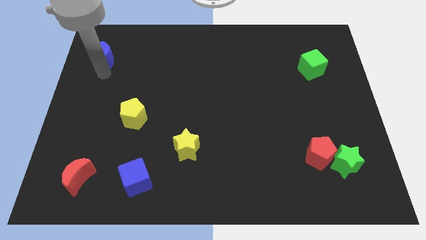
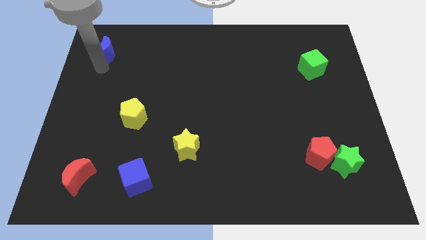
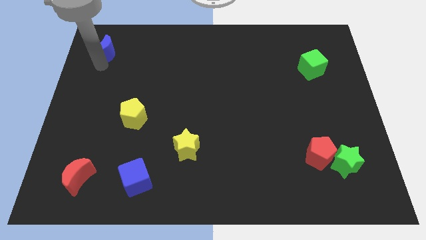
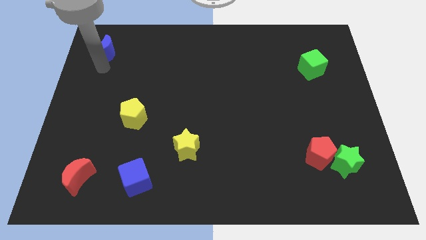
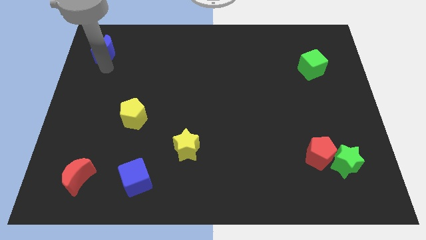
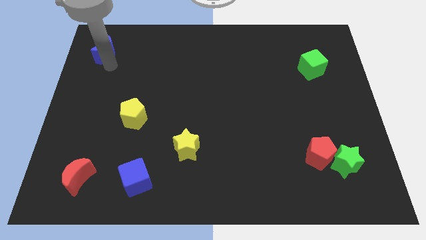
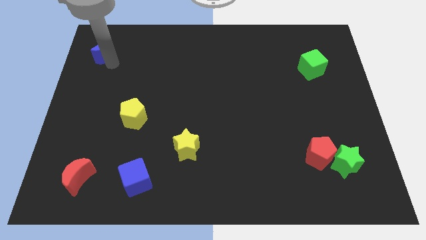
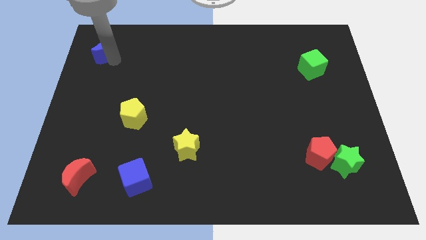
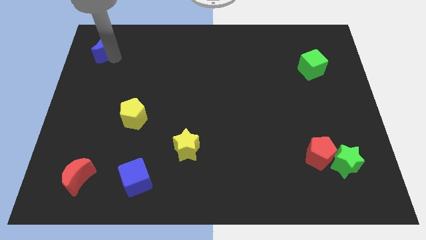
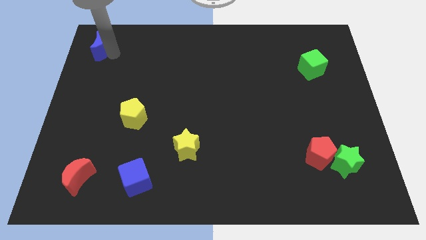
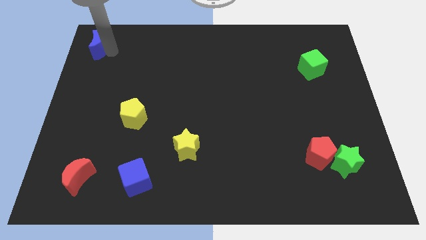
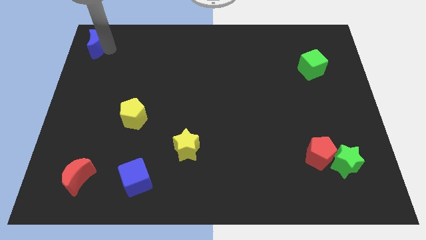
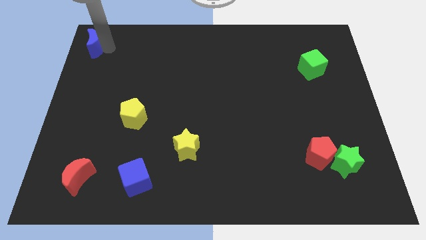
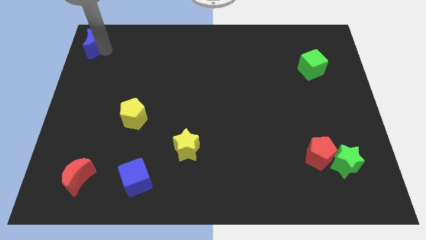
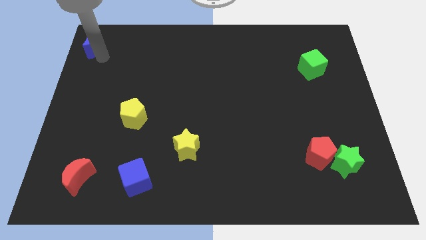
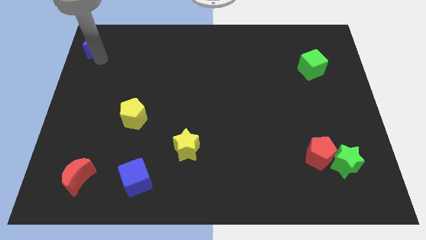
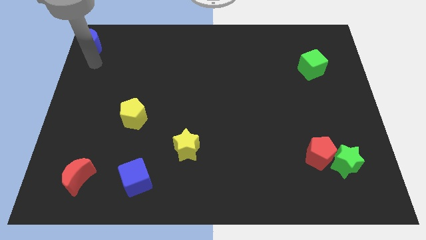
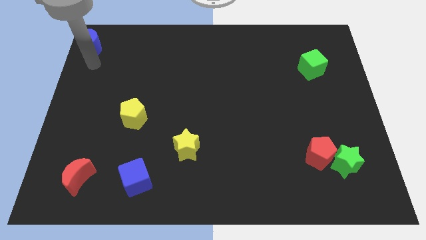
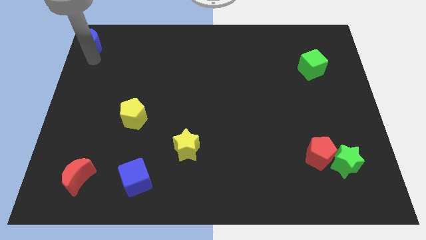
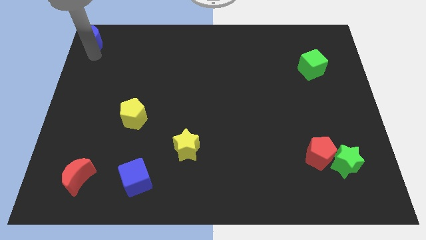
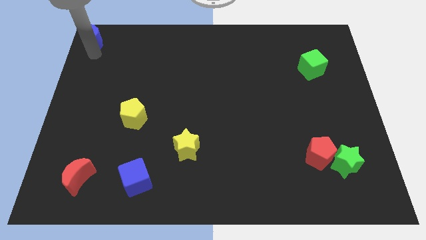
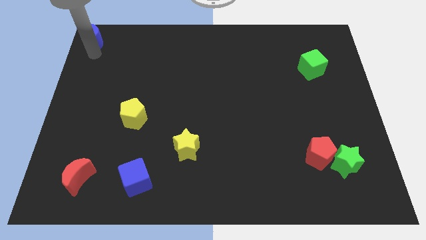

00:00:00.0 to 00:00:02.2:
move the blue crescent to the top left of the board

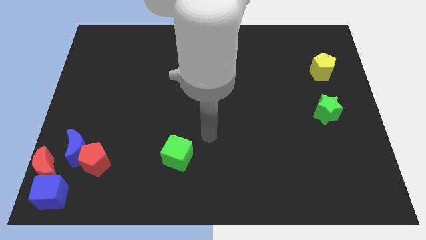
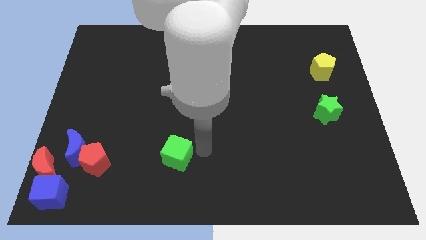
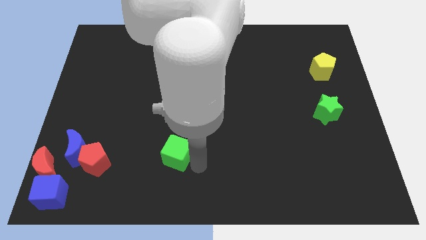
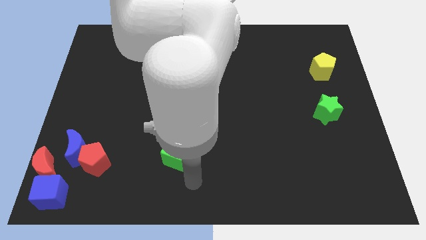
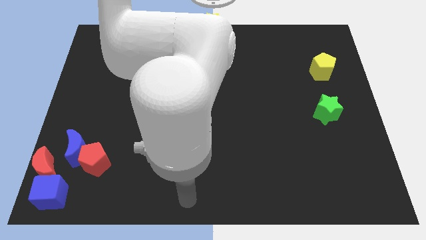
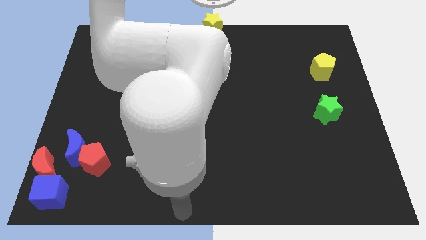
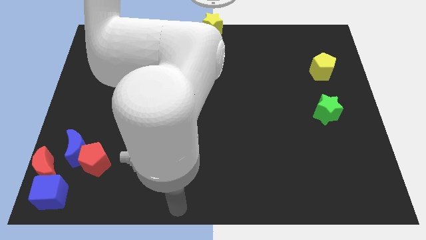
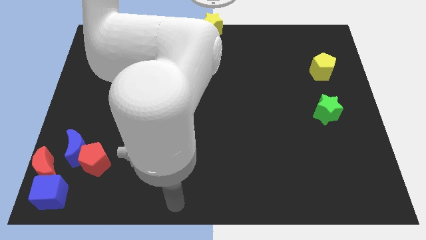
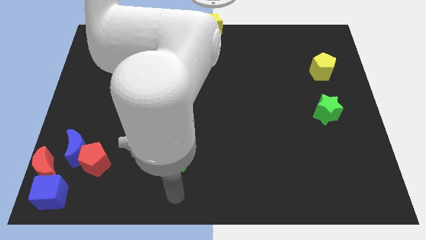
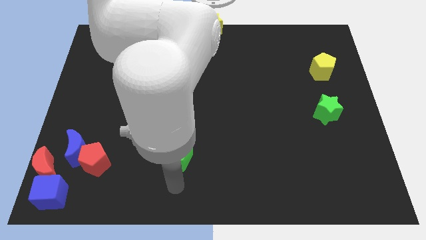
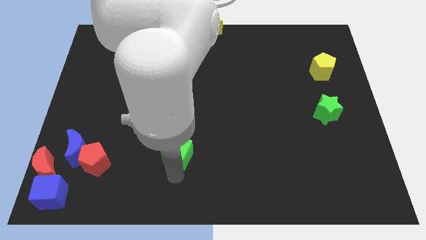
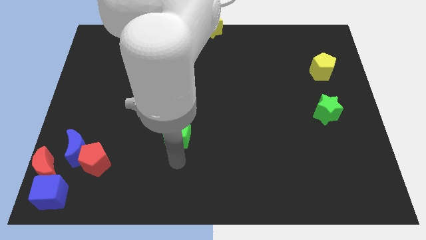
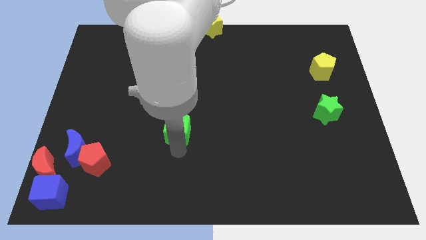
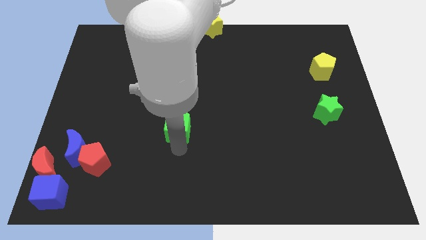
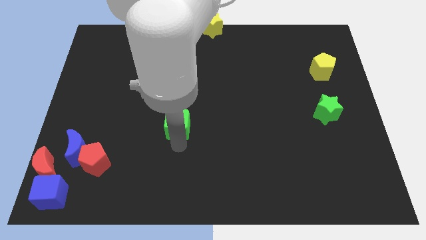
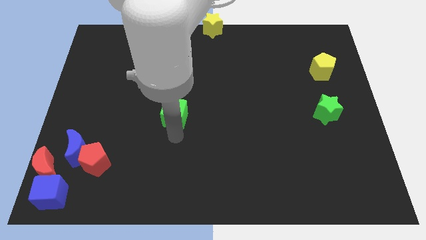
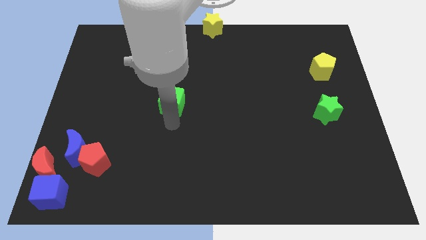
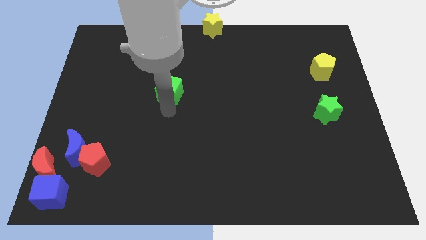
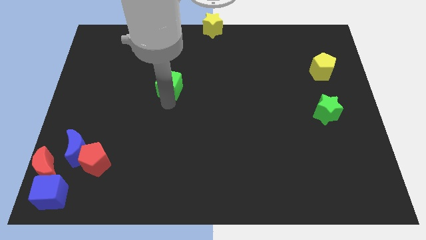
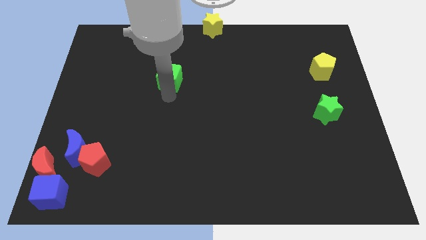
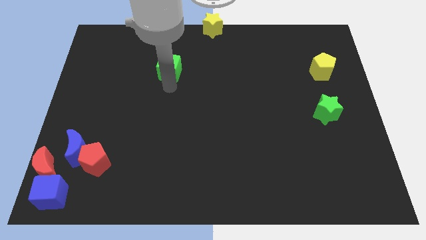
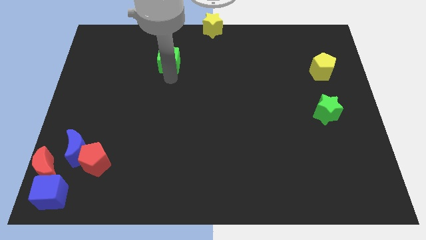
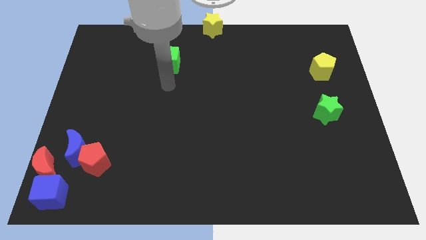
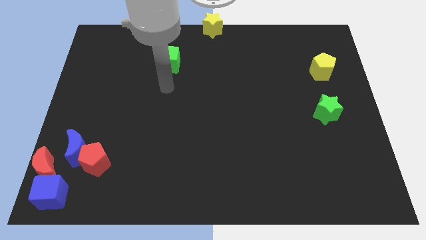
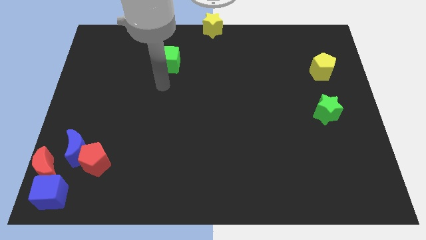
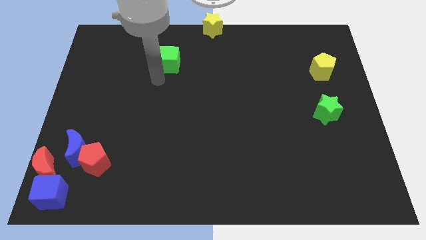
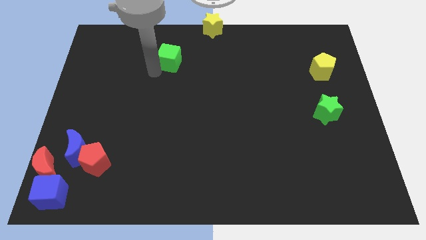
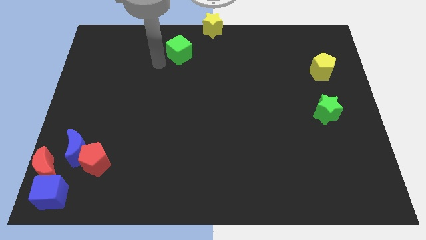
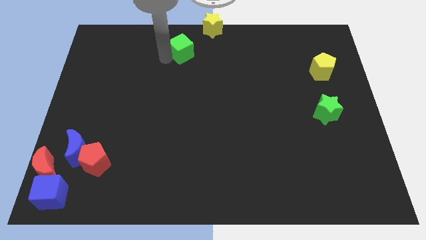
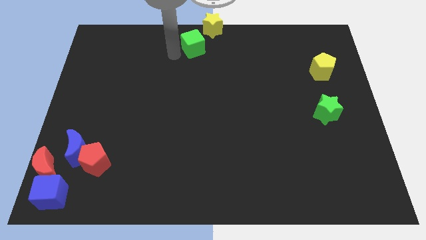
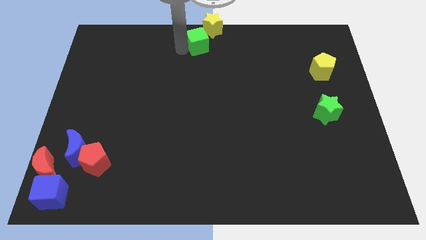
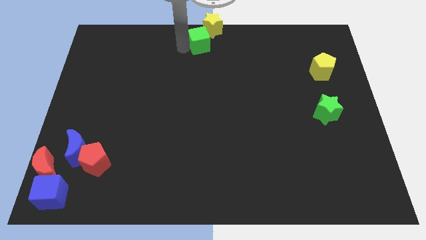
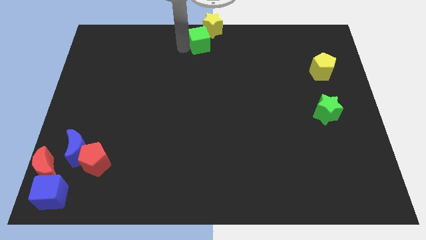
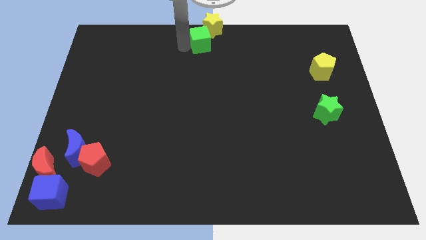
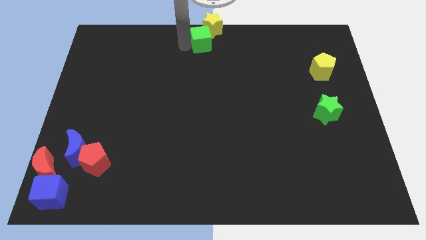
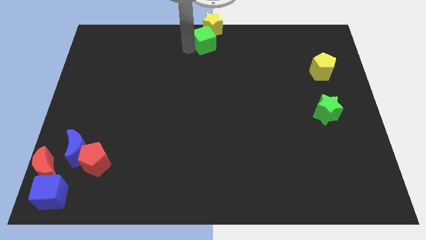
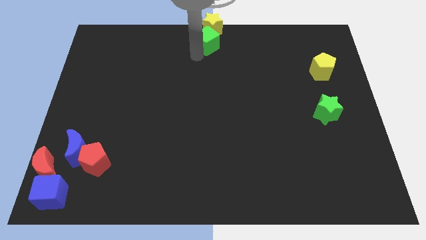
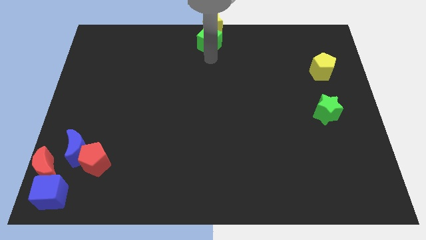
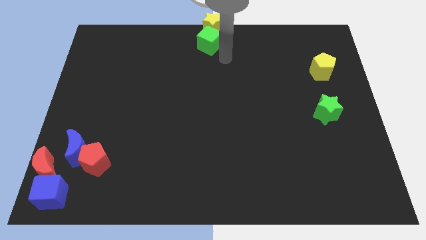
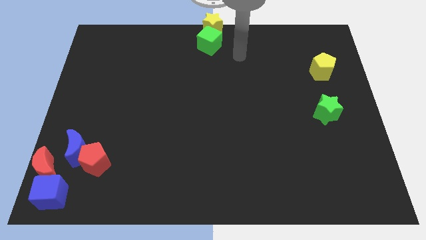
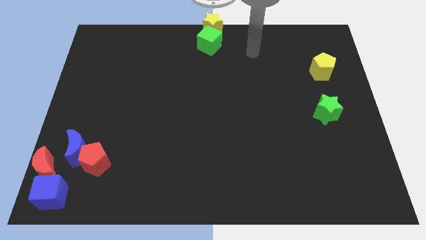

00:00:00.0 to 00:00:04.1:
move the green cube below the yellow star

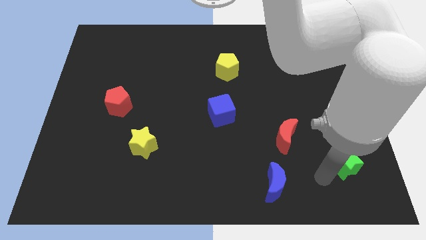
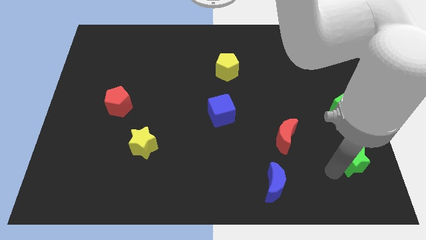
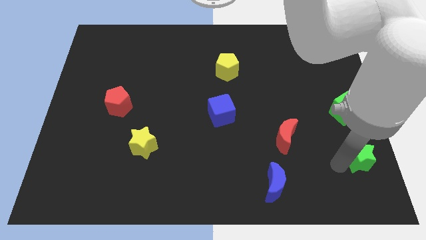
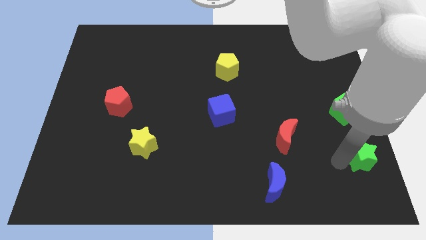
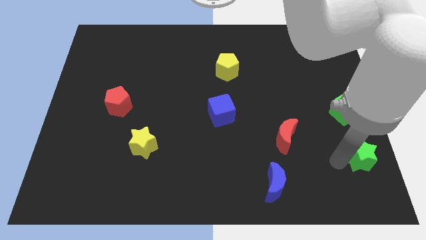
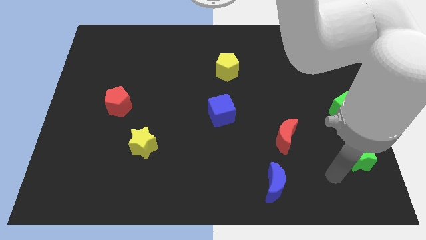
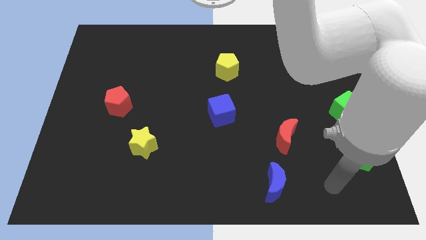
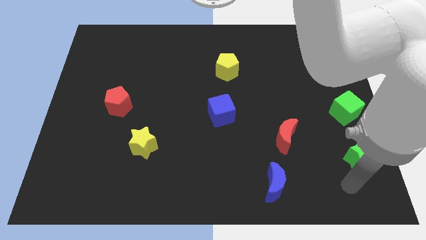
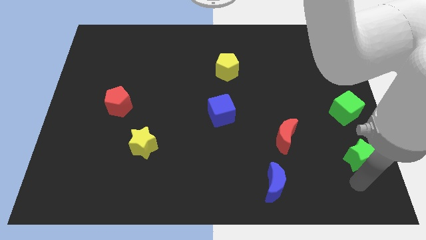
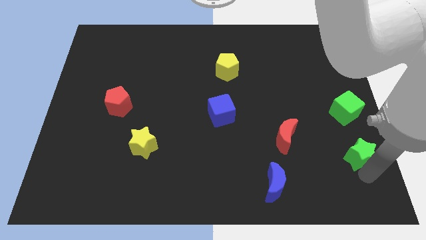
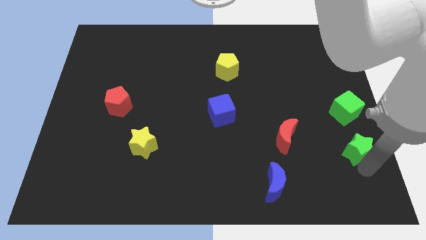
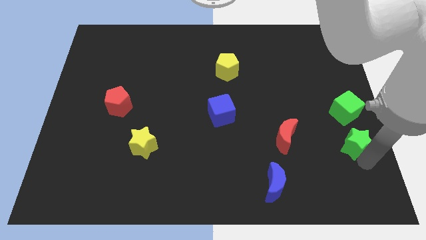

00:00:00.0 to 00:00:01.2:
place the green star below the green cube

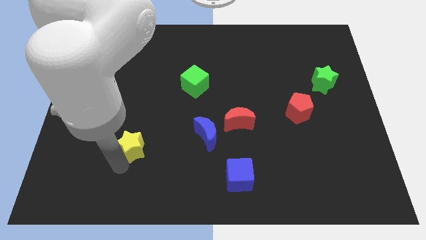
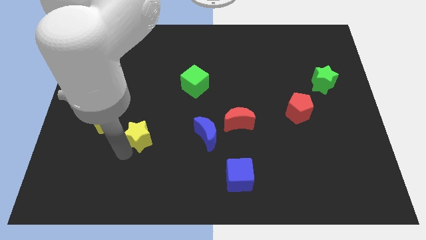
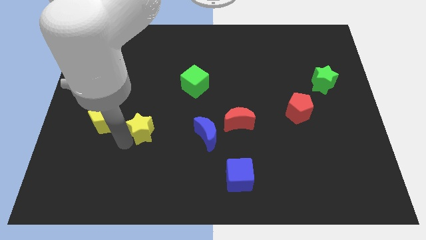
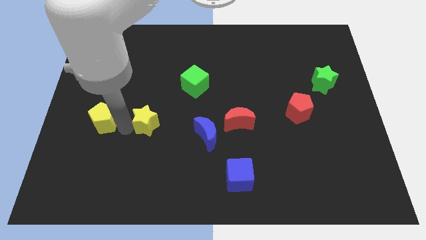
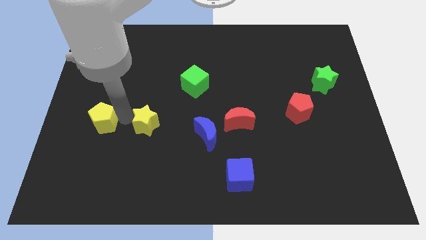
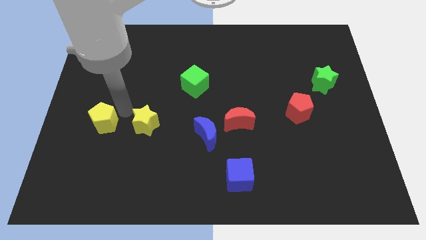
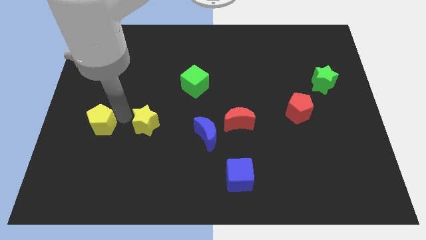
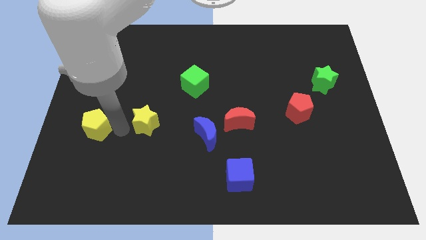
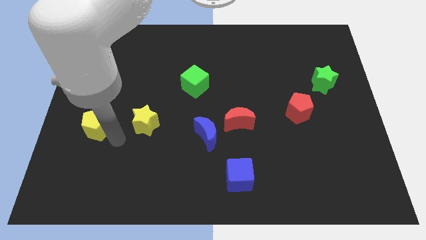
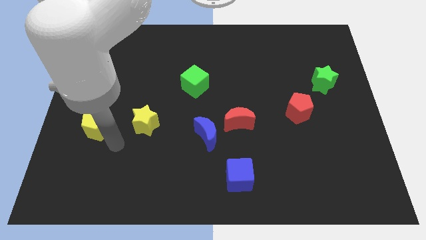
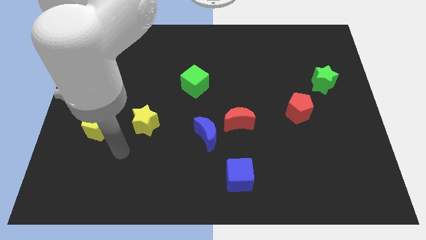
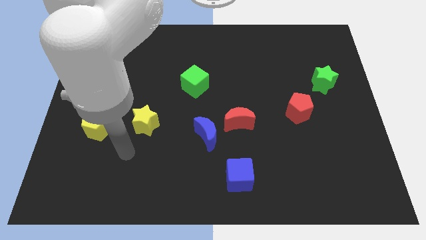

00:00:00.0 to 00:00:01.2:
place the yellow star horizontally to the right side of the yellow pentagon

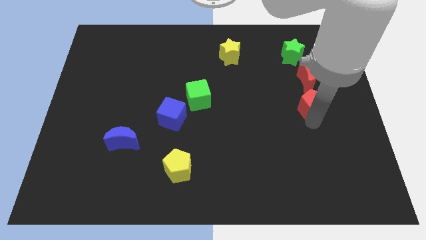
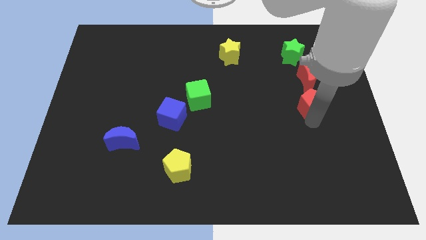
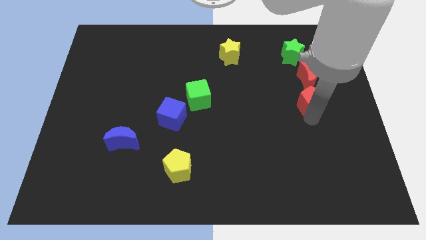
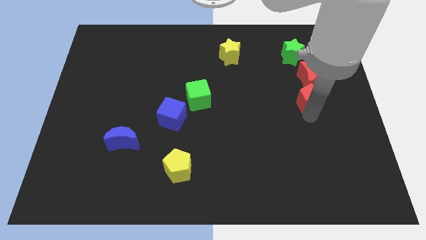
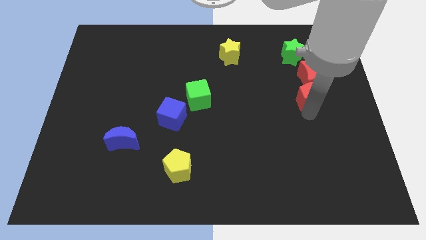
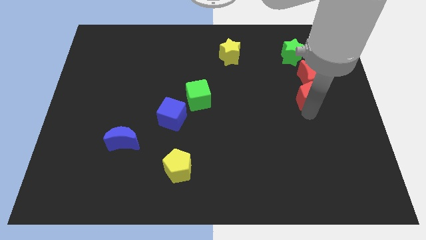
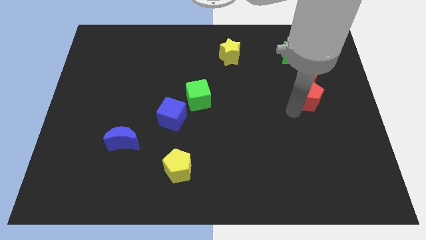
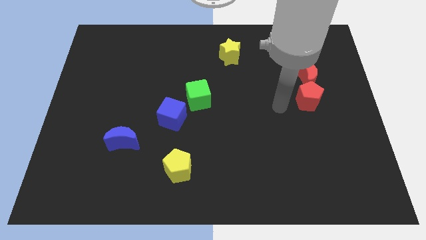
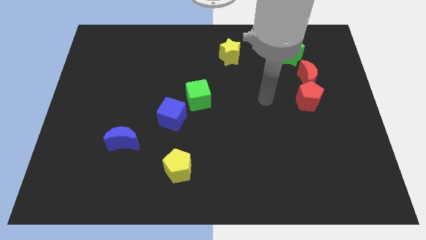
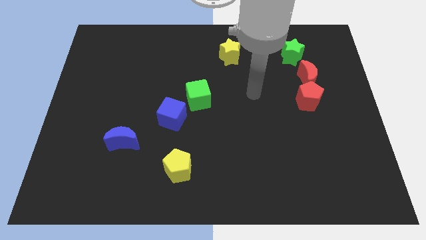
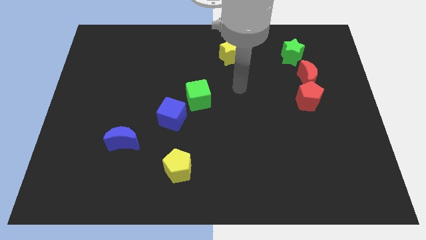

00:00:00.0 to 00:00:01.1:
push red pentagon into red crescent
